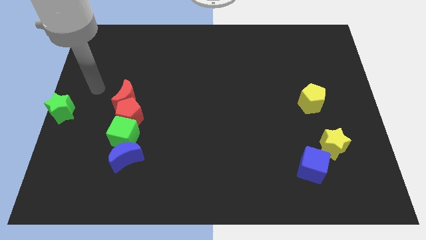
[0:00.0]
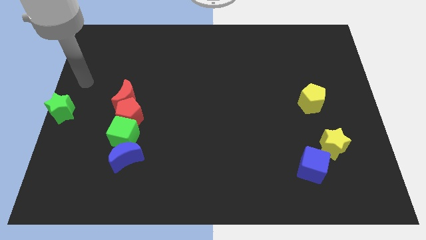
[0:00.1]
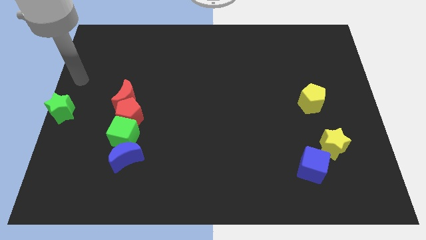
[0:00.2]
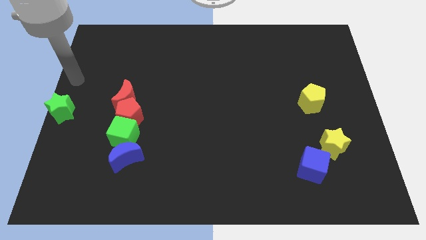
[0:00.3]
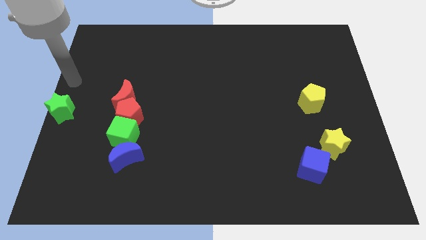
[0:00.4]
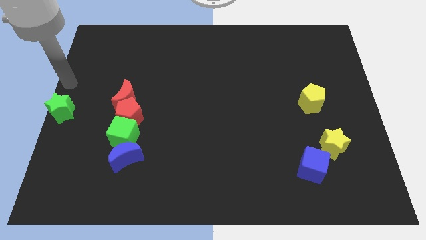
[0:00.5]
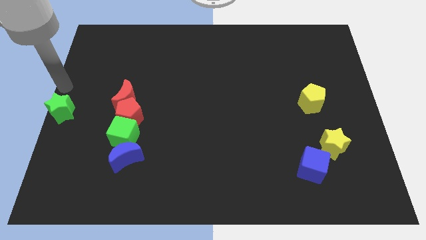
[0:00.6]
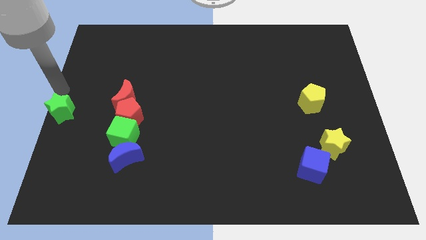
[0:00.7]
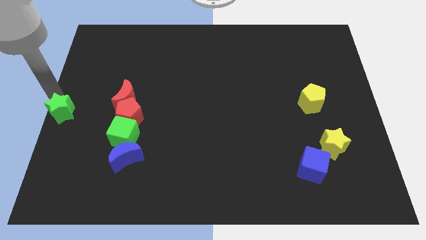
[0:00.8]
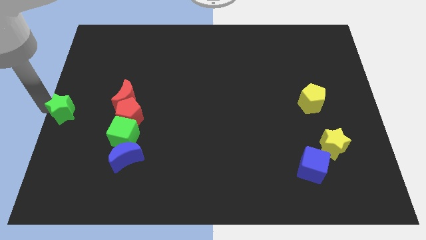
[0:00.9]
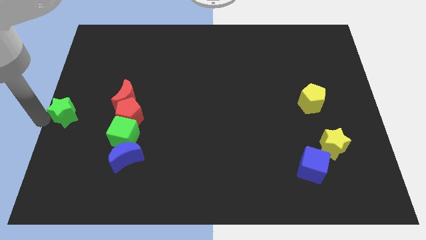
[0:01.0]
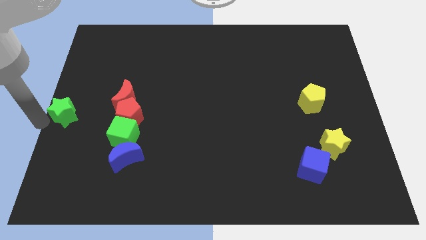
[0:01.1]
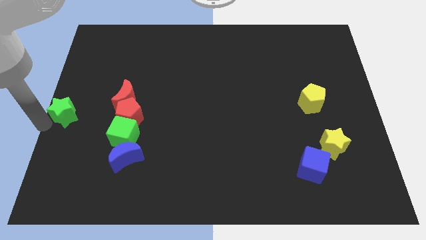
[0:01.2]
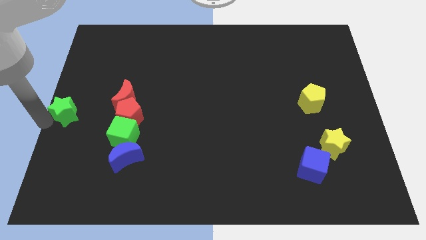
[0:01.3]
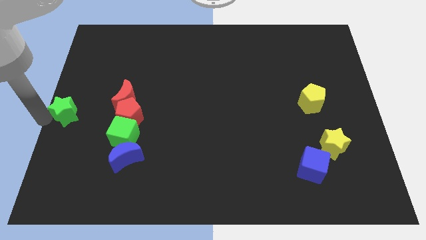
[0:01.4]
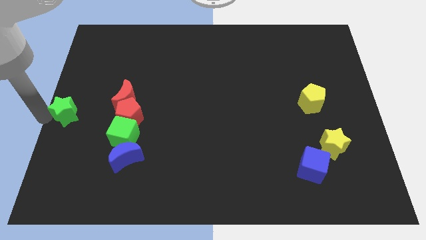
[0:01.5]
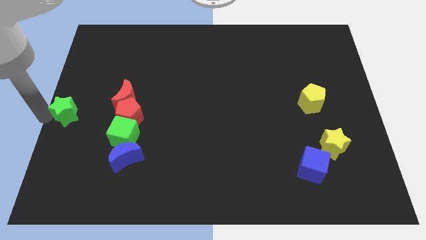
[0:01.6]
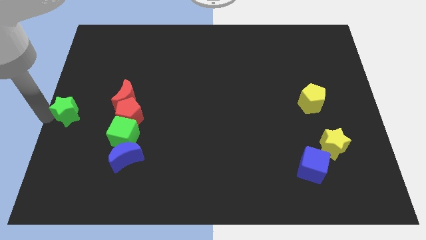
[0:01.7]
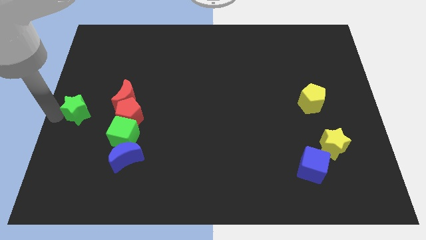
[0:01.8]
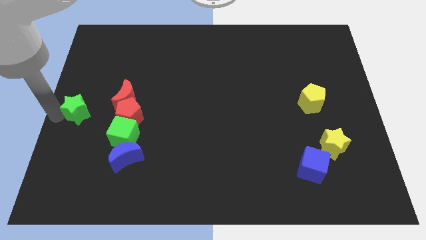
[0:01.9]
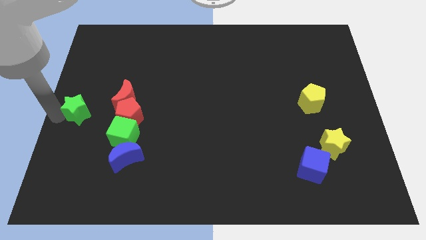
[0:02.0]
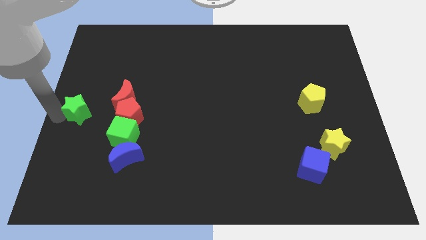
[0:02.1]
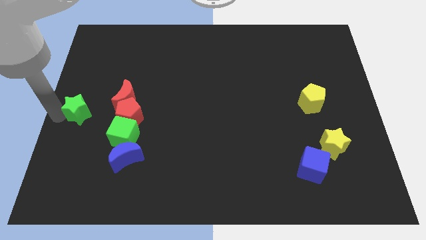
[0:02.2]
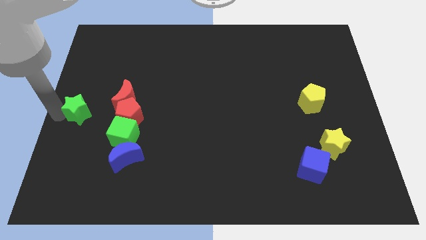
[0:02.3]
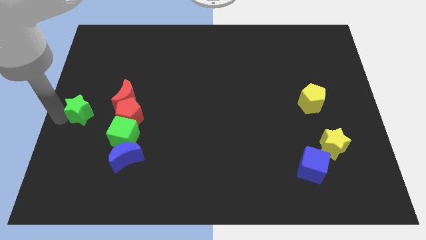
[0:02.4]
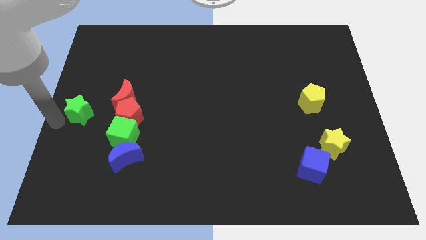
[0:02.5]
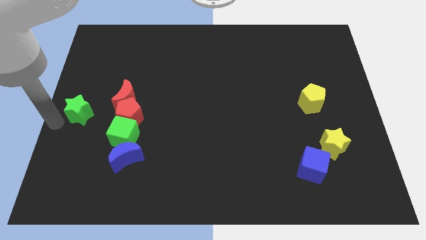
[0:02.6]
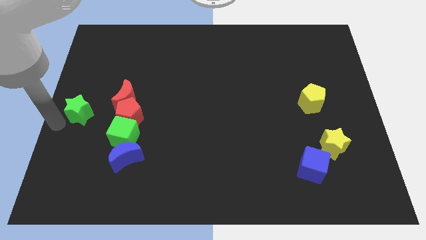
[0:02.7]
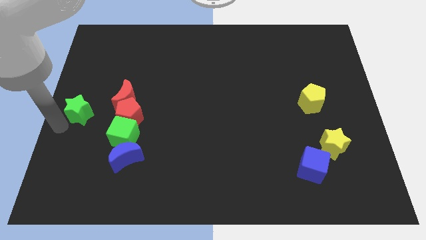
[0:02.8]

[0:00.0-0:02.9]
move the green star towards center

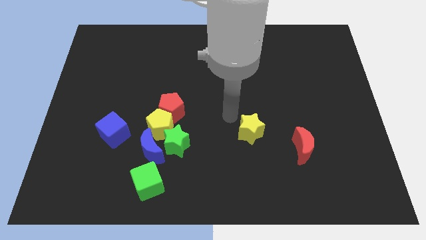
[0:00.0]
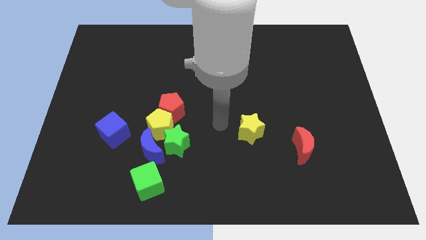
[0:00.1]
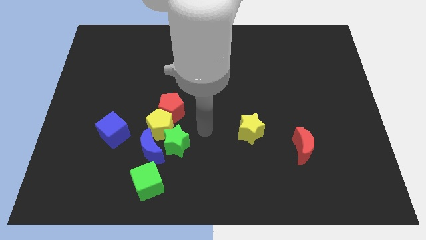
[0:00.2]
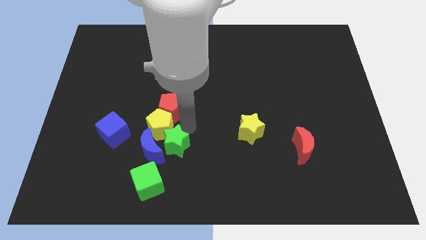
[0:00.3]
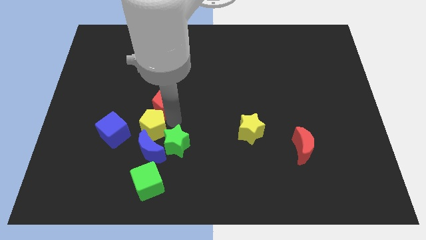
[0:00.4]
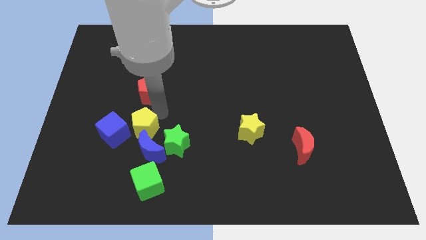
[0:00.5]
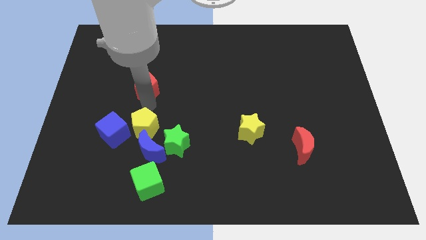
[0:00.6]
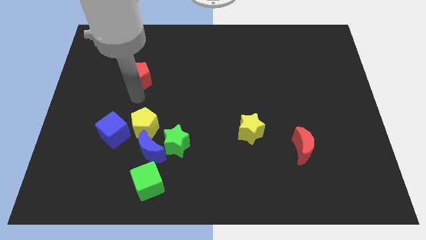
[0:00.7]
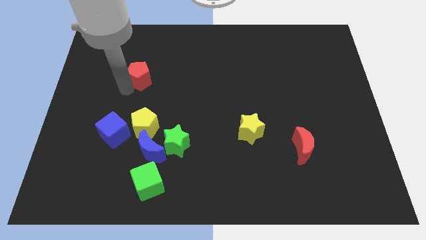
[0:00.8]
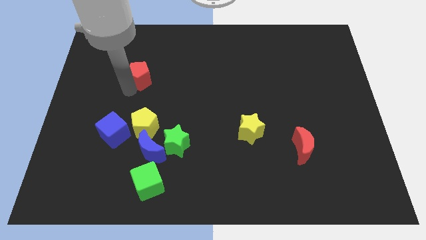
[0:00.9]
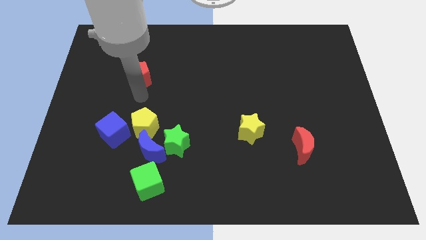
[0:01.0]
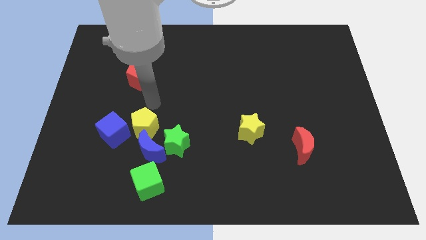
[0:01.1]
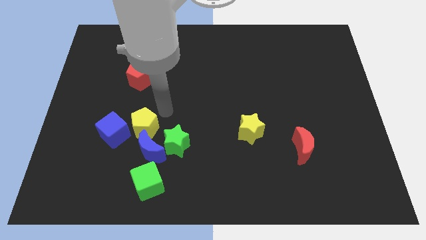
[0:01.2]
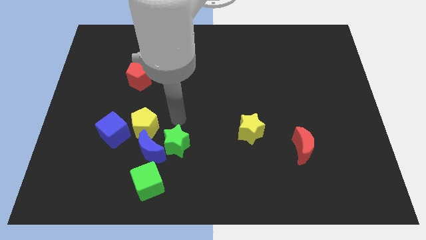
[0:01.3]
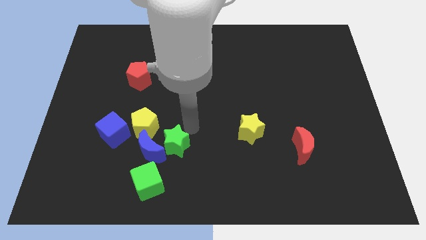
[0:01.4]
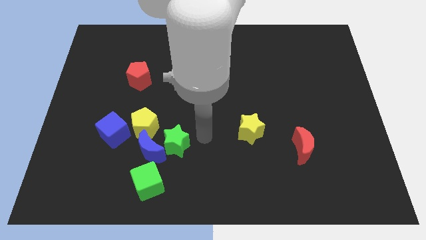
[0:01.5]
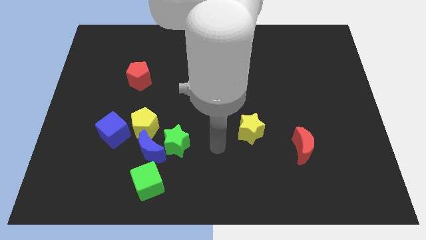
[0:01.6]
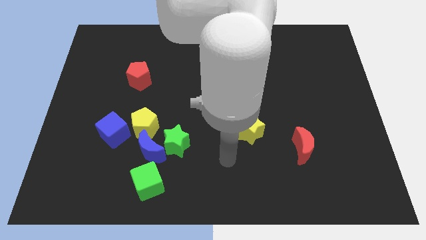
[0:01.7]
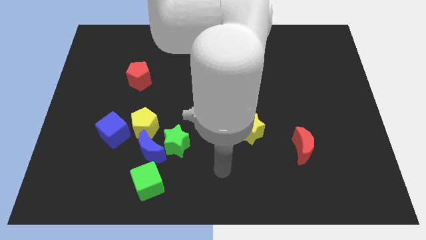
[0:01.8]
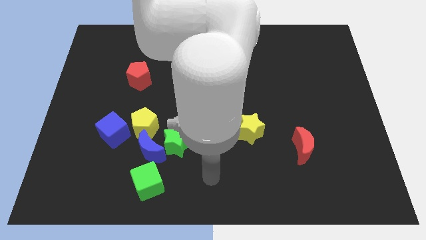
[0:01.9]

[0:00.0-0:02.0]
seperate the red pentagon from the yellow pentagon

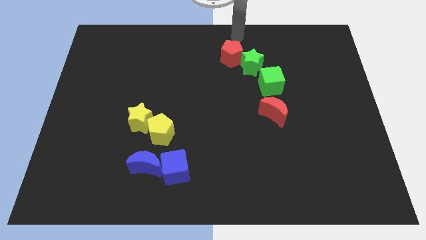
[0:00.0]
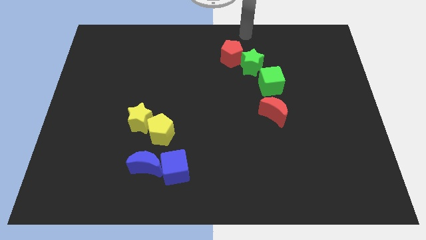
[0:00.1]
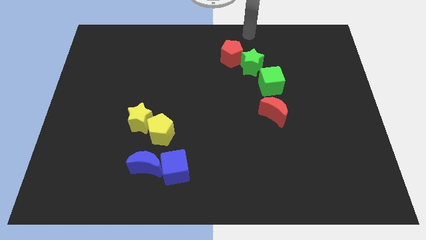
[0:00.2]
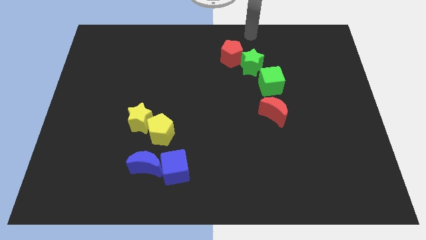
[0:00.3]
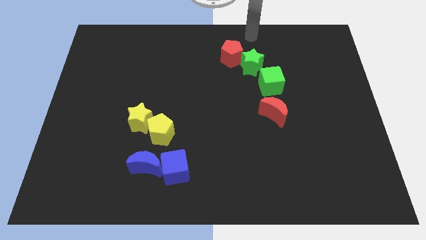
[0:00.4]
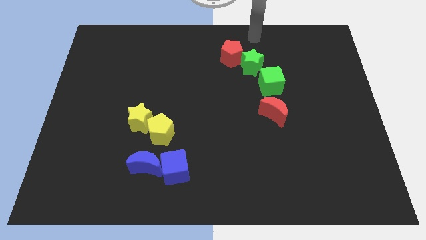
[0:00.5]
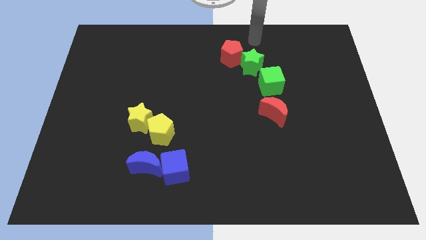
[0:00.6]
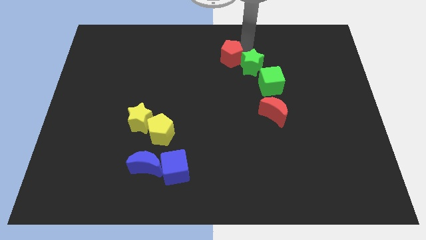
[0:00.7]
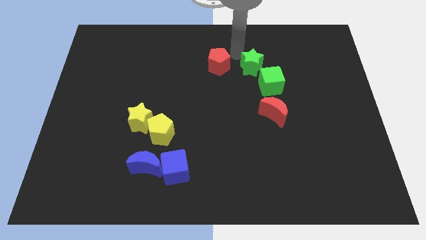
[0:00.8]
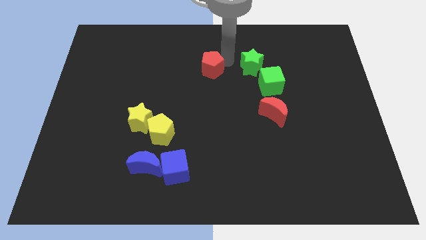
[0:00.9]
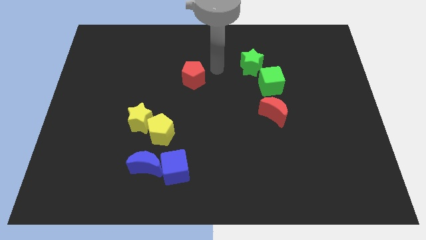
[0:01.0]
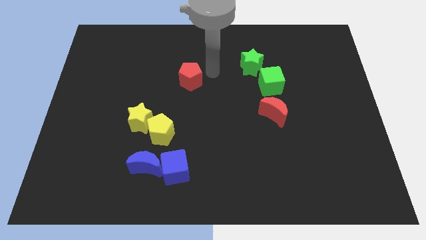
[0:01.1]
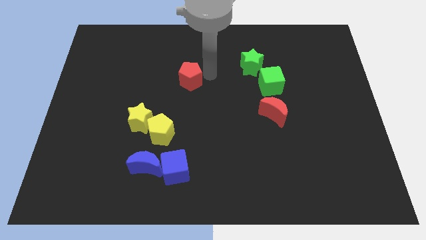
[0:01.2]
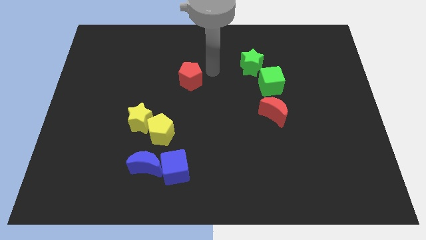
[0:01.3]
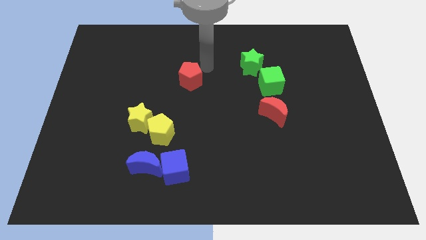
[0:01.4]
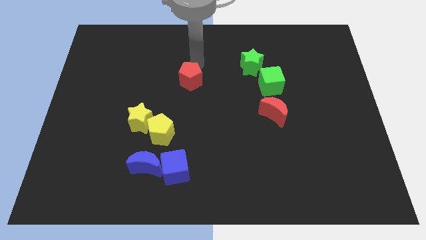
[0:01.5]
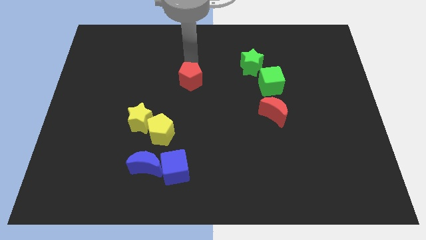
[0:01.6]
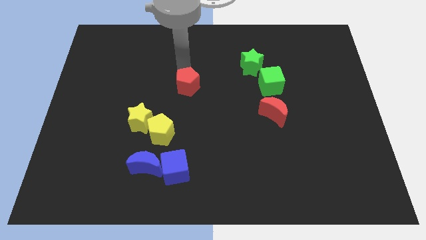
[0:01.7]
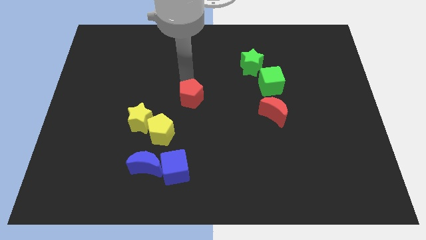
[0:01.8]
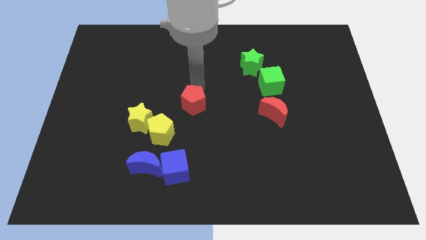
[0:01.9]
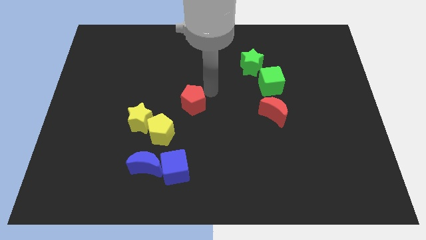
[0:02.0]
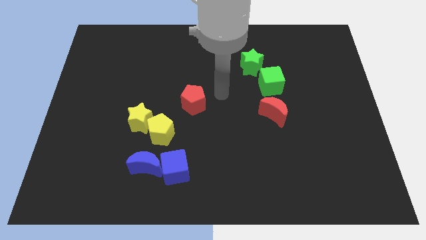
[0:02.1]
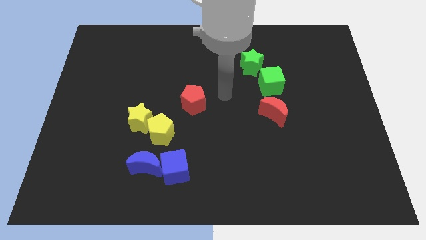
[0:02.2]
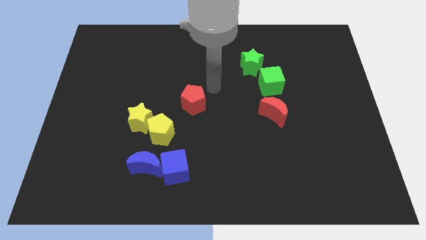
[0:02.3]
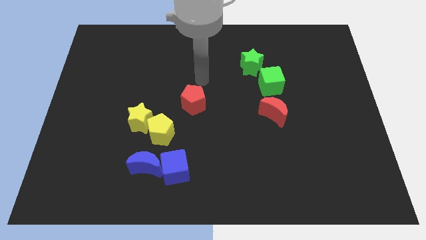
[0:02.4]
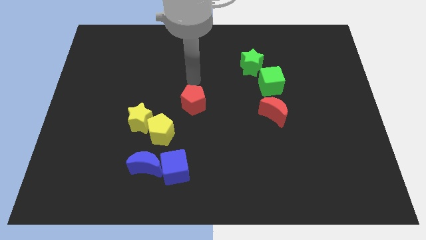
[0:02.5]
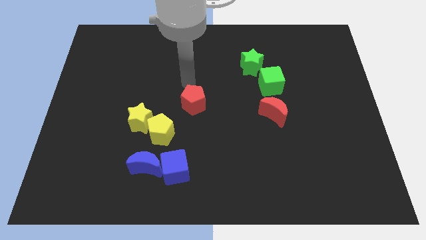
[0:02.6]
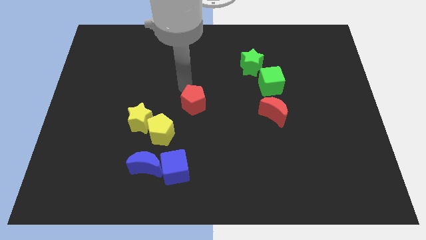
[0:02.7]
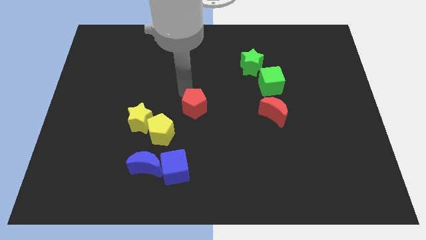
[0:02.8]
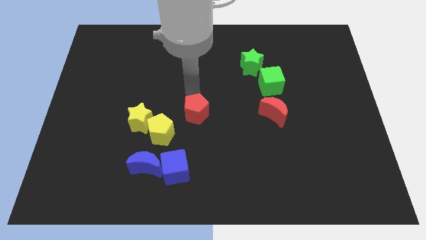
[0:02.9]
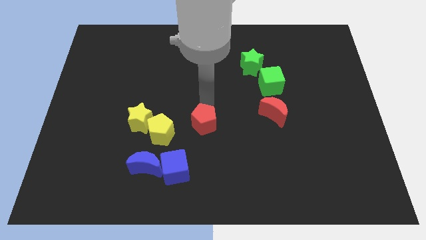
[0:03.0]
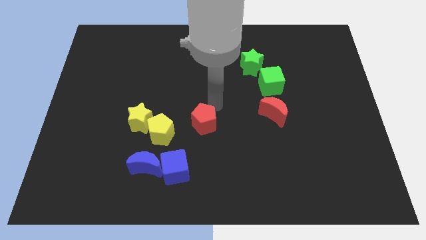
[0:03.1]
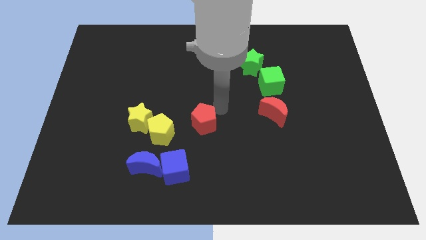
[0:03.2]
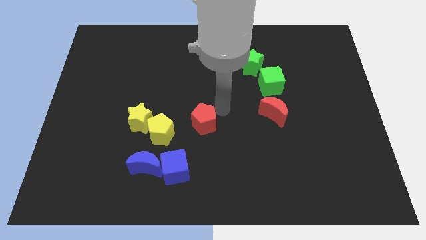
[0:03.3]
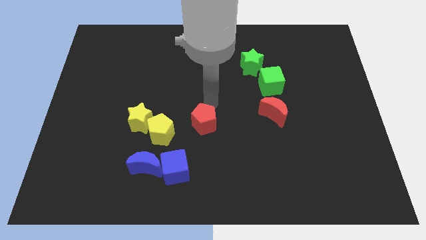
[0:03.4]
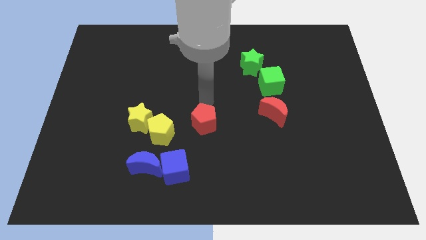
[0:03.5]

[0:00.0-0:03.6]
drag the red pentagon diagonal top right to the blue cube

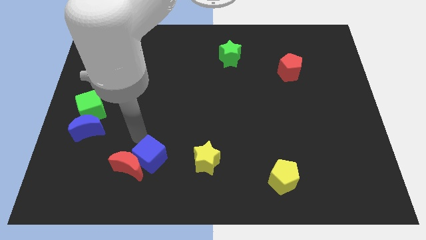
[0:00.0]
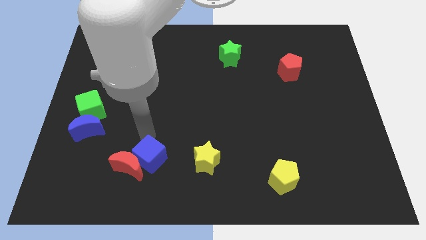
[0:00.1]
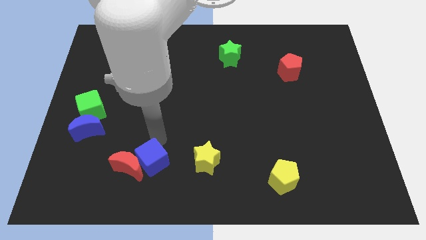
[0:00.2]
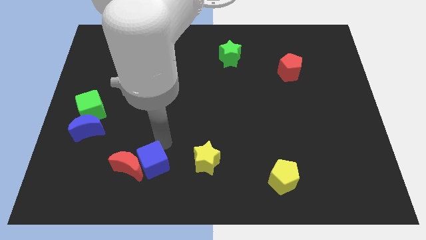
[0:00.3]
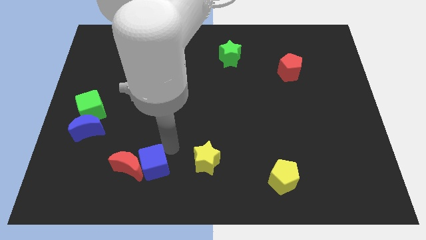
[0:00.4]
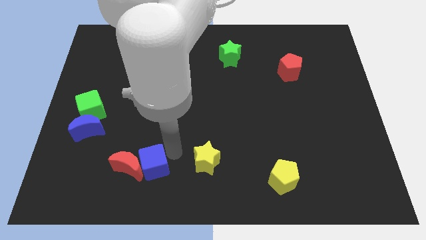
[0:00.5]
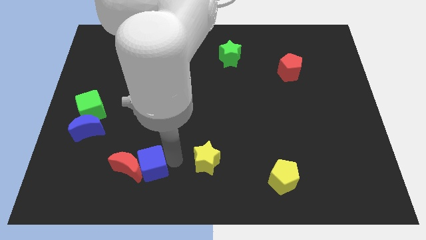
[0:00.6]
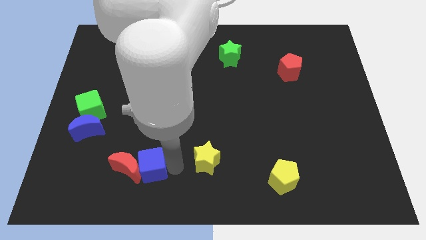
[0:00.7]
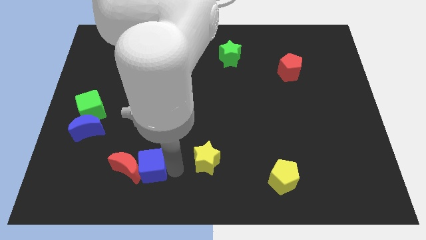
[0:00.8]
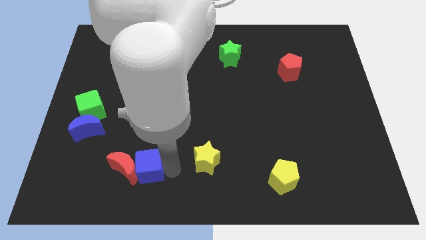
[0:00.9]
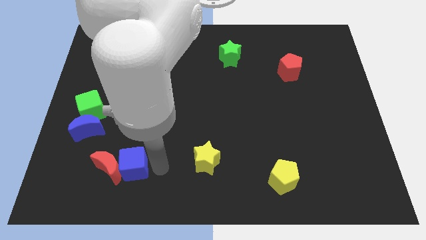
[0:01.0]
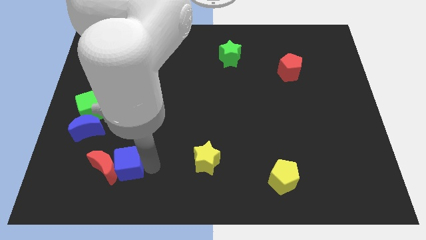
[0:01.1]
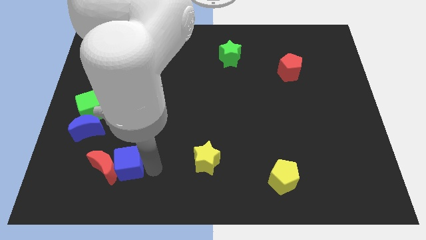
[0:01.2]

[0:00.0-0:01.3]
move the blue cube to the right of the red crescent
